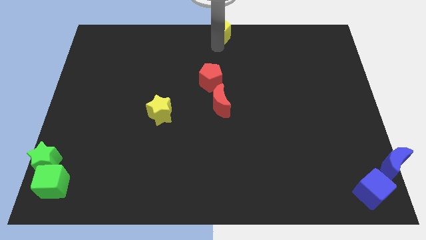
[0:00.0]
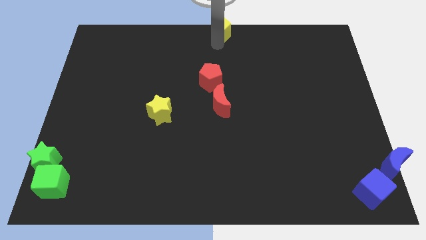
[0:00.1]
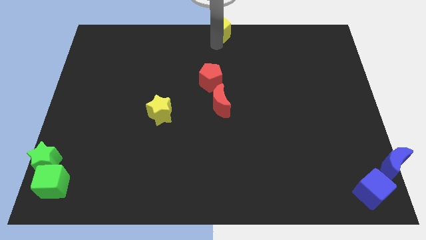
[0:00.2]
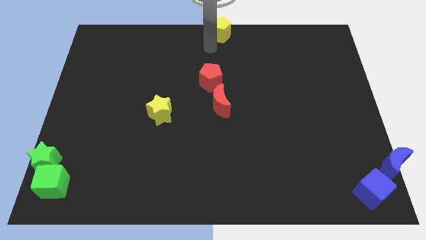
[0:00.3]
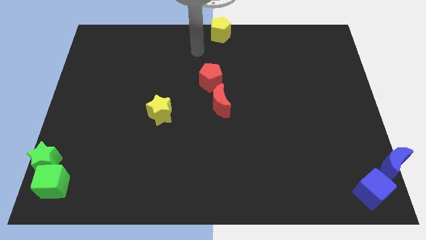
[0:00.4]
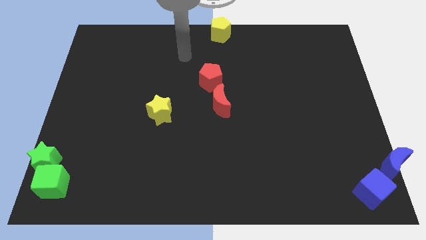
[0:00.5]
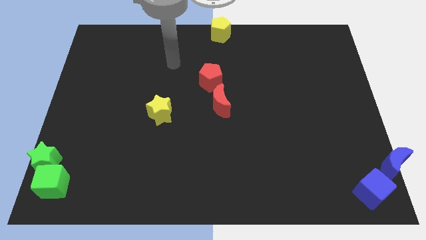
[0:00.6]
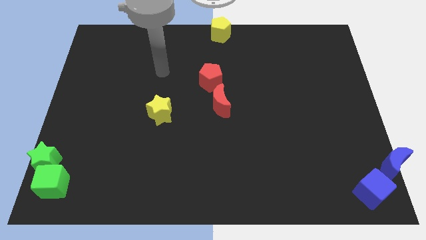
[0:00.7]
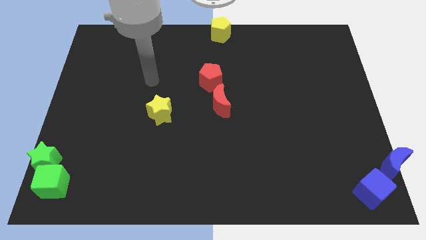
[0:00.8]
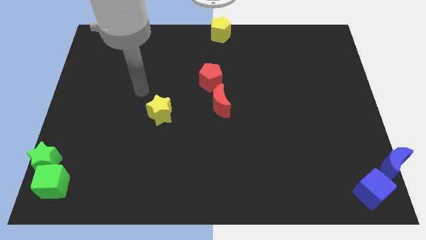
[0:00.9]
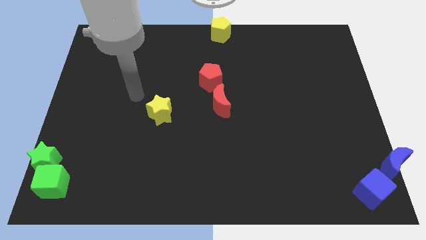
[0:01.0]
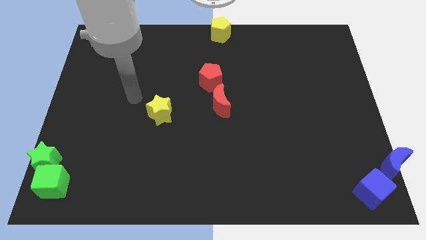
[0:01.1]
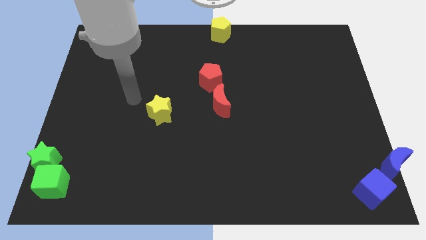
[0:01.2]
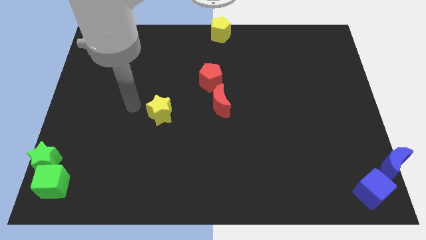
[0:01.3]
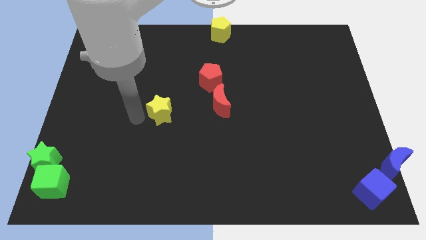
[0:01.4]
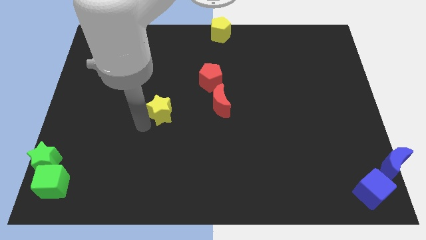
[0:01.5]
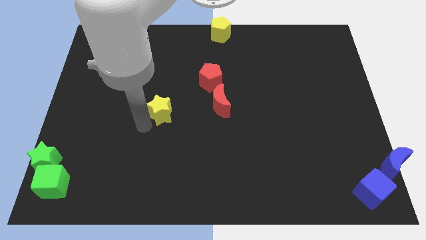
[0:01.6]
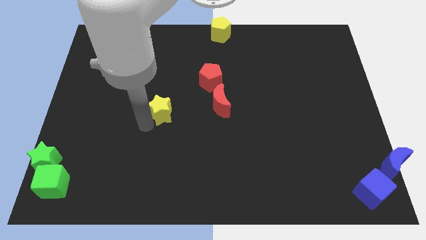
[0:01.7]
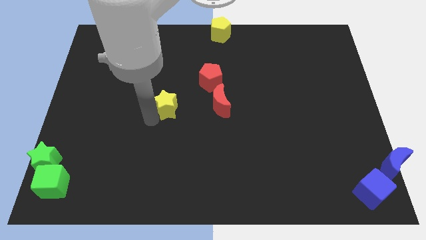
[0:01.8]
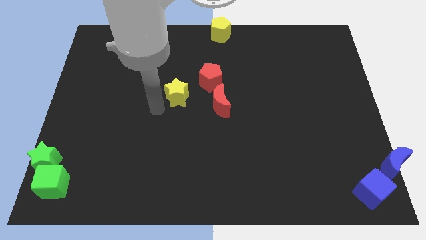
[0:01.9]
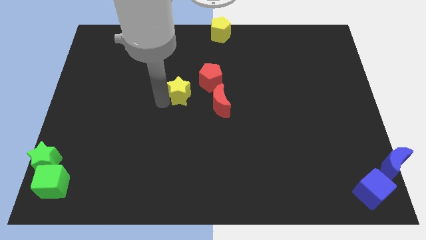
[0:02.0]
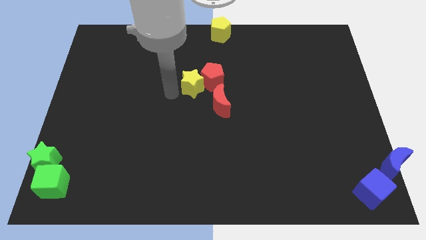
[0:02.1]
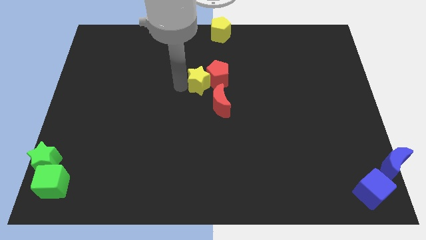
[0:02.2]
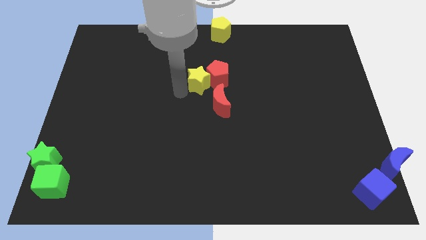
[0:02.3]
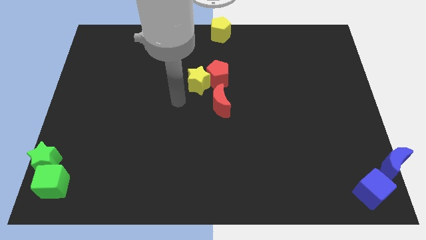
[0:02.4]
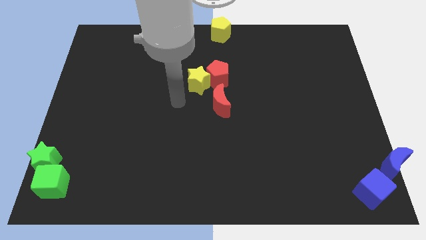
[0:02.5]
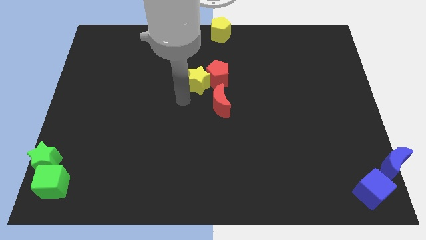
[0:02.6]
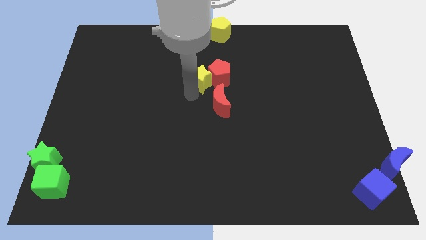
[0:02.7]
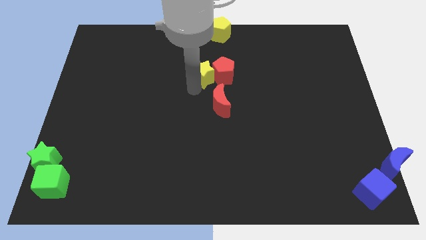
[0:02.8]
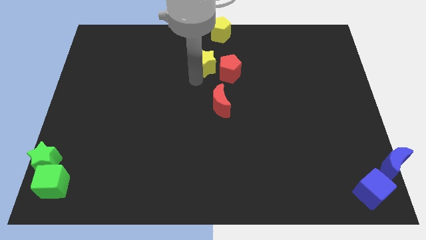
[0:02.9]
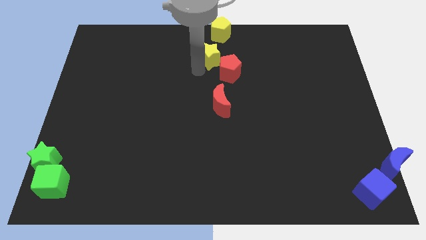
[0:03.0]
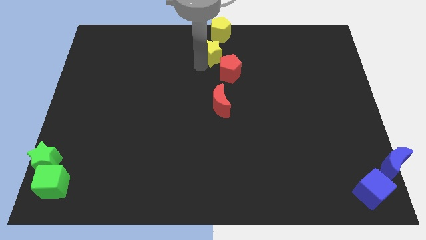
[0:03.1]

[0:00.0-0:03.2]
push the yellow star into the red pentagon

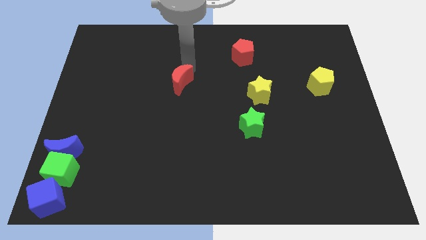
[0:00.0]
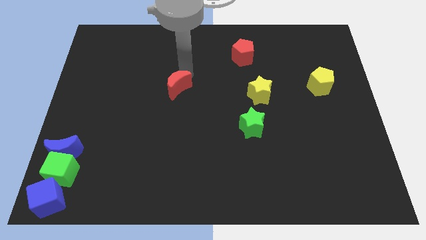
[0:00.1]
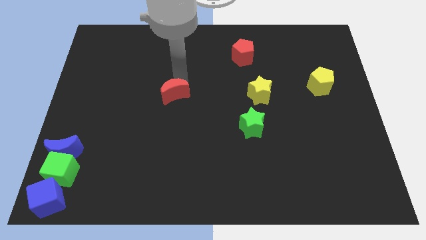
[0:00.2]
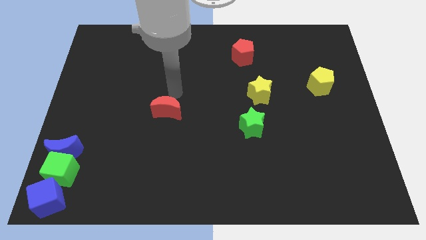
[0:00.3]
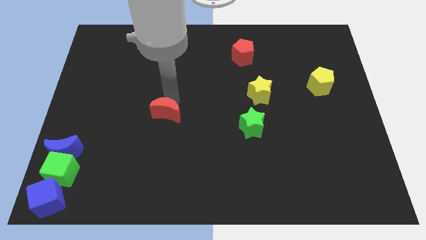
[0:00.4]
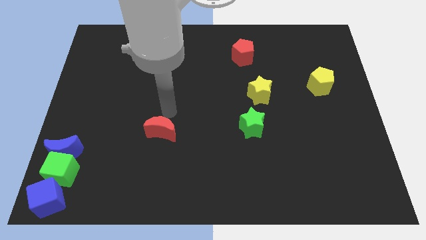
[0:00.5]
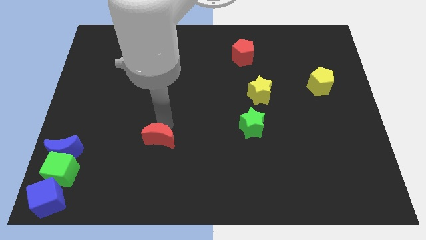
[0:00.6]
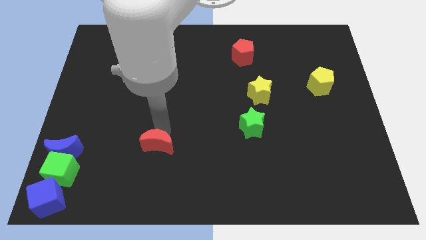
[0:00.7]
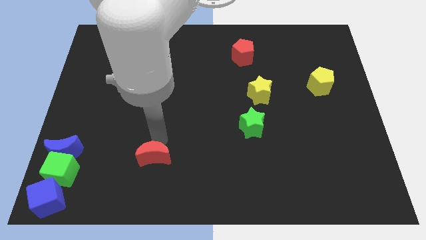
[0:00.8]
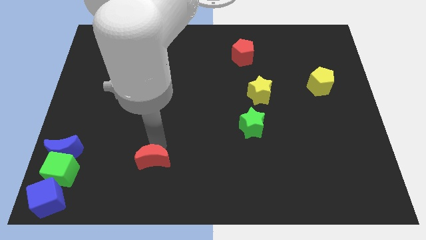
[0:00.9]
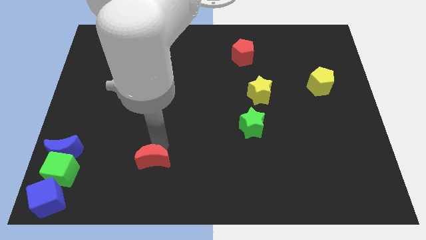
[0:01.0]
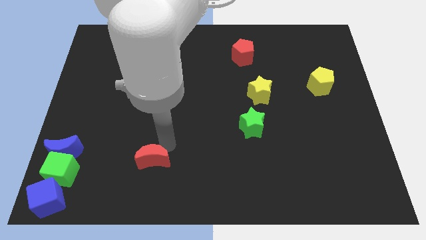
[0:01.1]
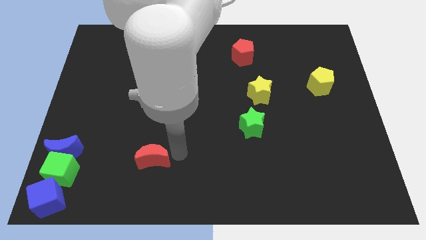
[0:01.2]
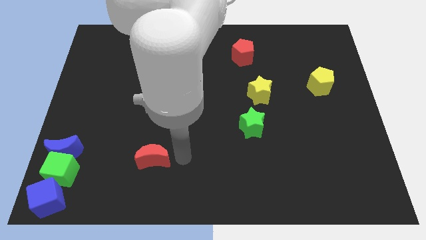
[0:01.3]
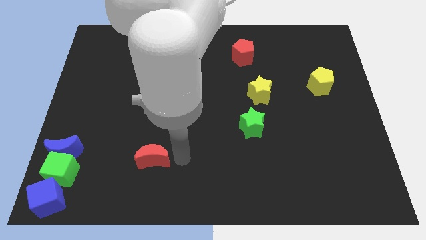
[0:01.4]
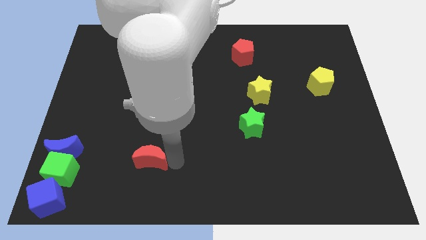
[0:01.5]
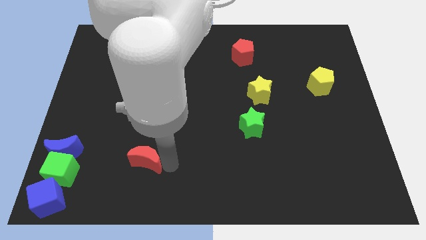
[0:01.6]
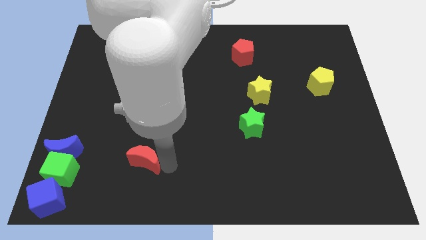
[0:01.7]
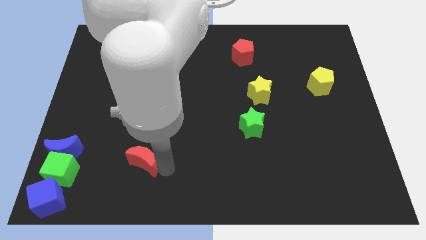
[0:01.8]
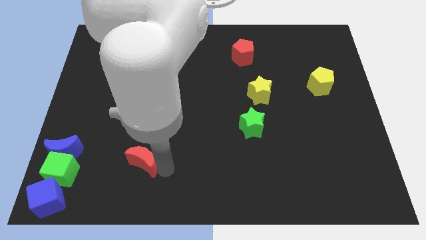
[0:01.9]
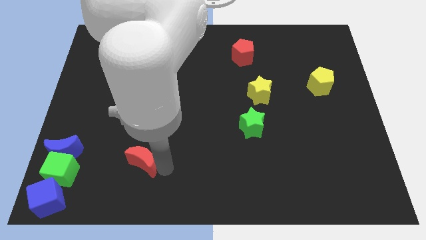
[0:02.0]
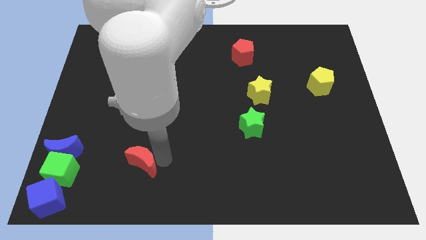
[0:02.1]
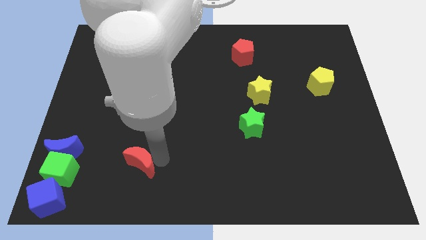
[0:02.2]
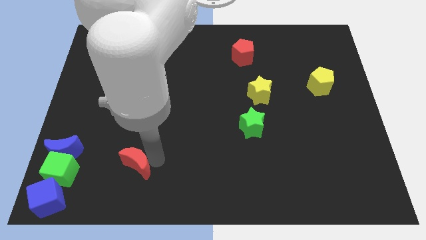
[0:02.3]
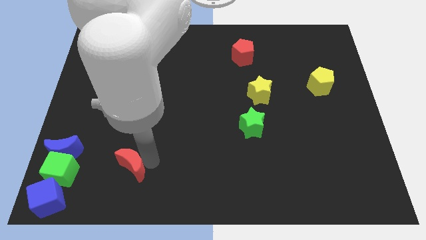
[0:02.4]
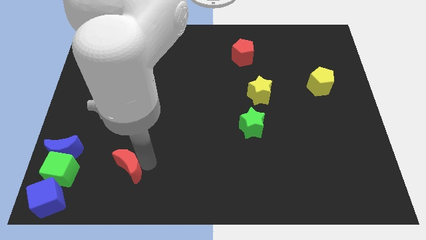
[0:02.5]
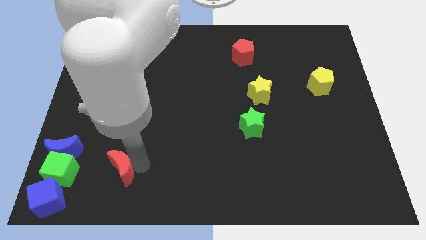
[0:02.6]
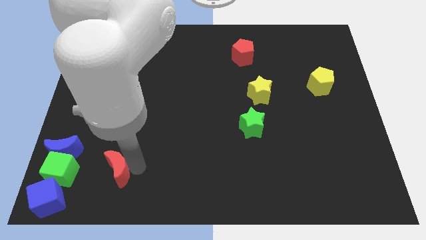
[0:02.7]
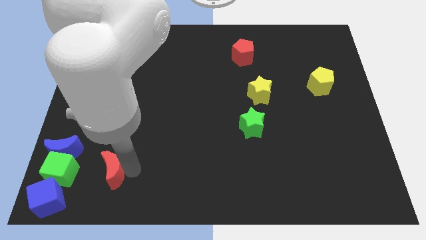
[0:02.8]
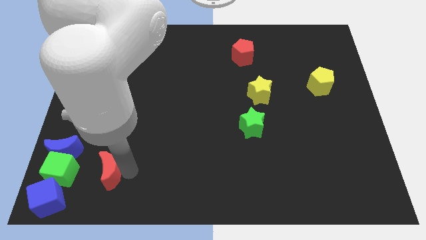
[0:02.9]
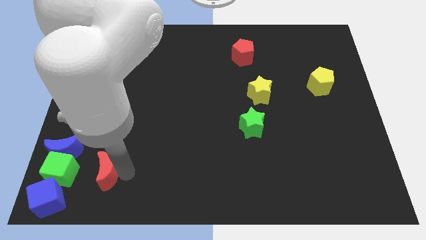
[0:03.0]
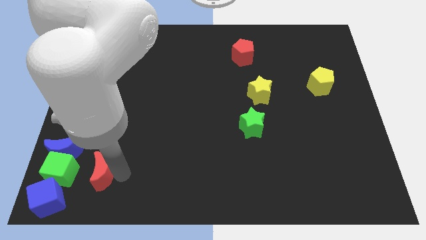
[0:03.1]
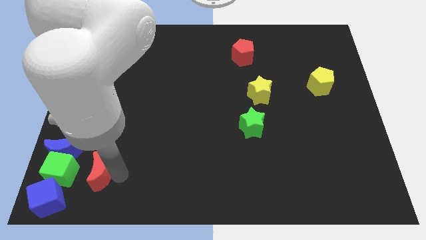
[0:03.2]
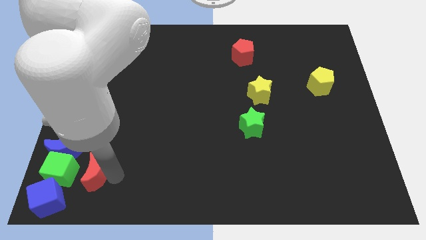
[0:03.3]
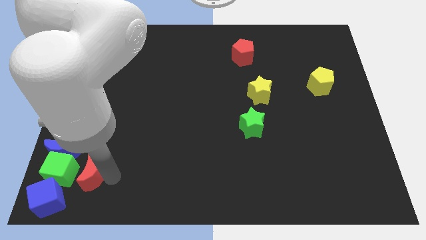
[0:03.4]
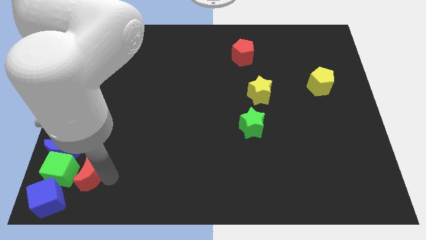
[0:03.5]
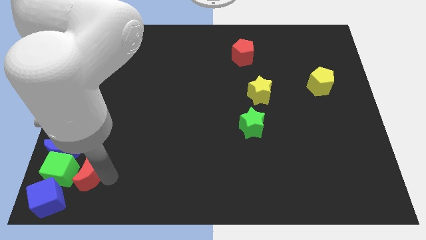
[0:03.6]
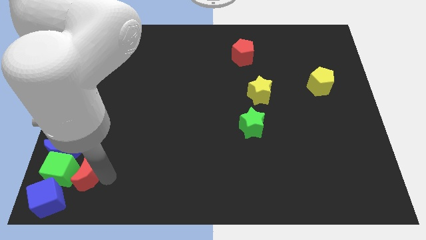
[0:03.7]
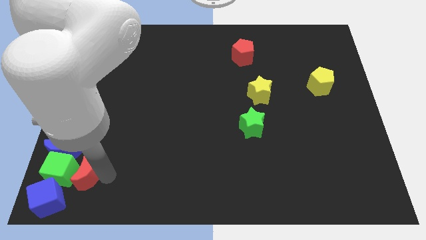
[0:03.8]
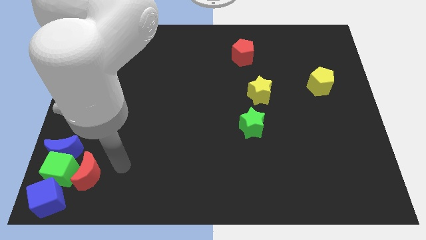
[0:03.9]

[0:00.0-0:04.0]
place red moon to the right of the green cube

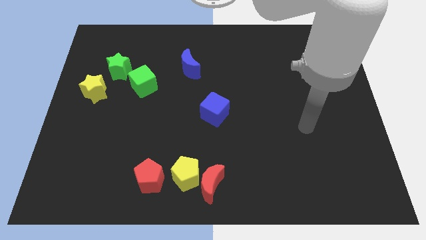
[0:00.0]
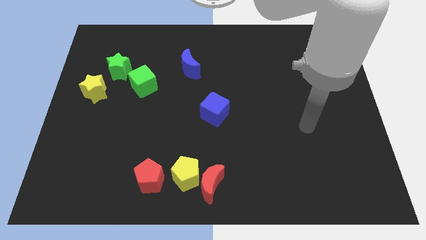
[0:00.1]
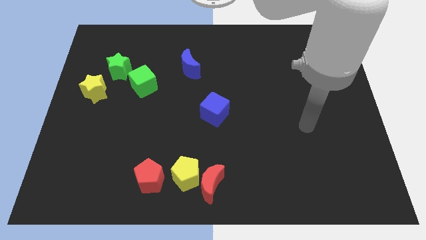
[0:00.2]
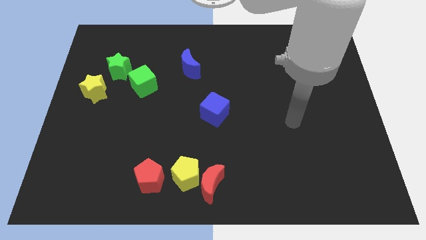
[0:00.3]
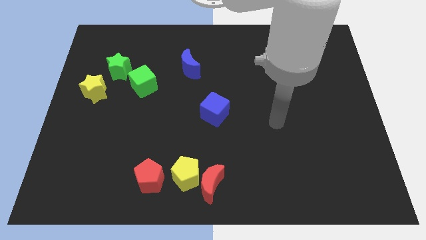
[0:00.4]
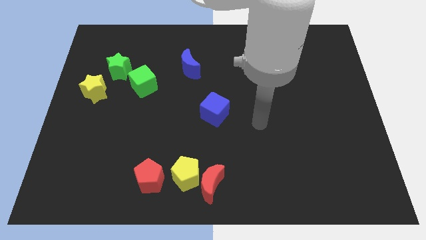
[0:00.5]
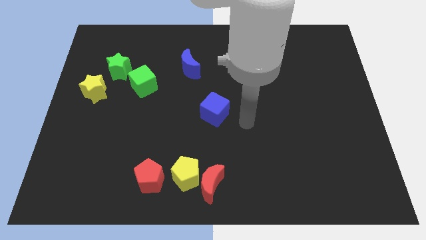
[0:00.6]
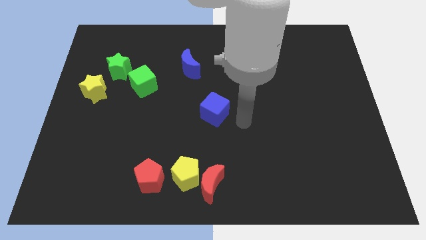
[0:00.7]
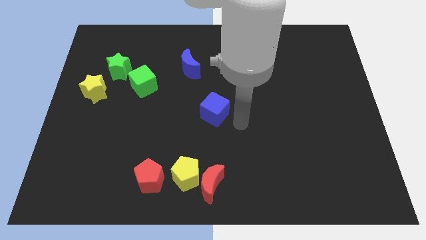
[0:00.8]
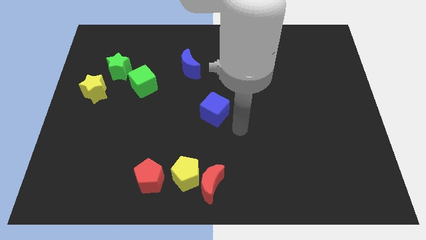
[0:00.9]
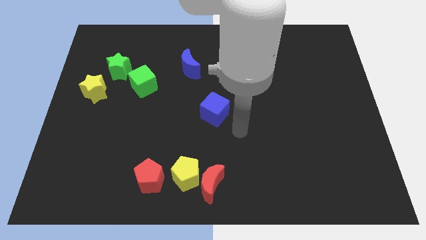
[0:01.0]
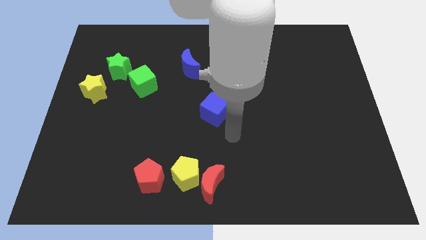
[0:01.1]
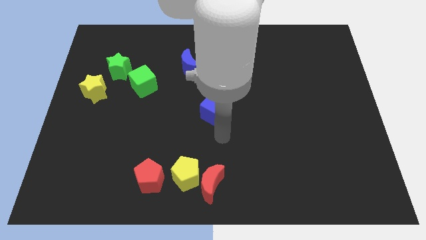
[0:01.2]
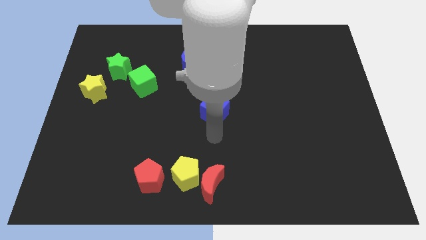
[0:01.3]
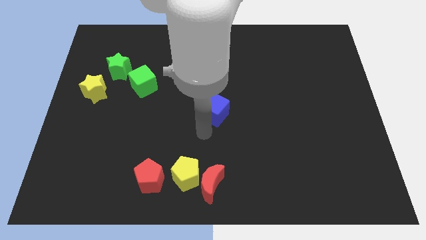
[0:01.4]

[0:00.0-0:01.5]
point your arm at the bottom side of the blue cube

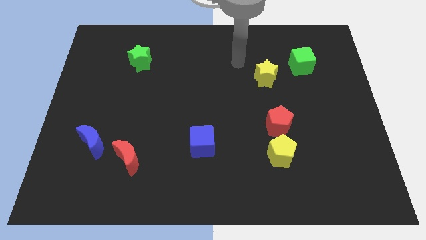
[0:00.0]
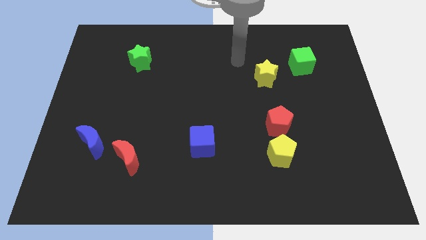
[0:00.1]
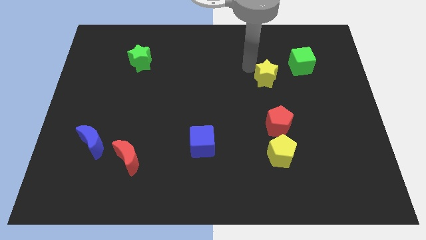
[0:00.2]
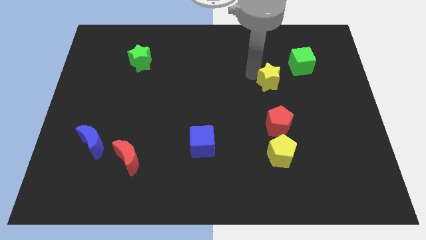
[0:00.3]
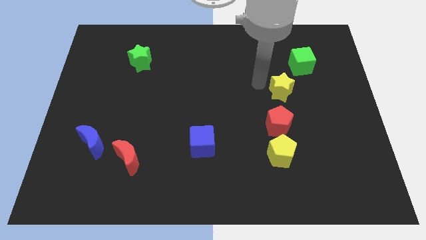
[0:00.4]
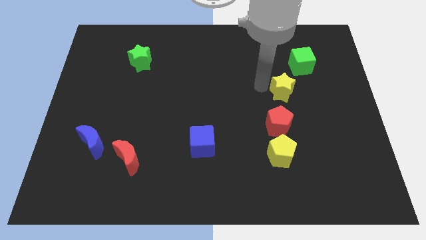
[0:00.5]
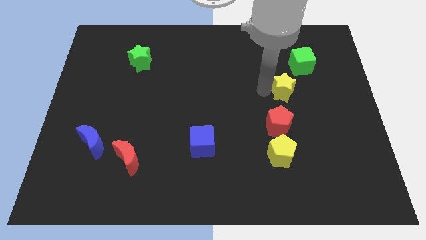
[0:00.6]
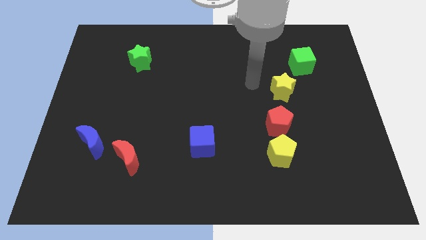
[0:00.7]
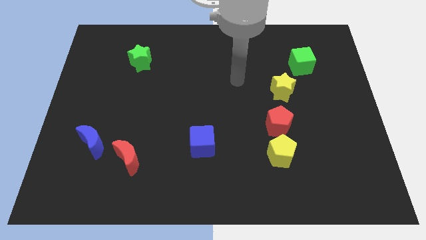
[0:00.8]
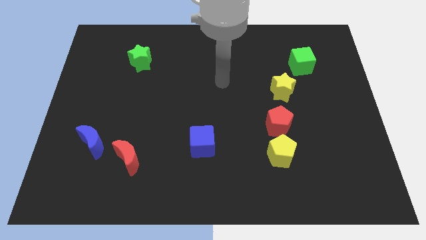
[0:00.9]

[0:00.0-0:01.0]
place yellow star above red pentagon
